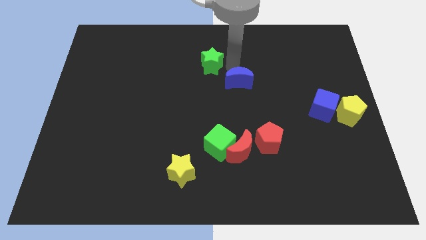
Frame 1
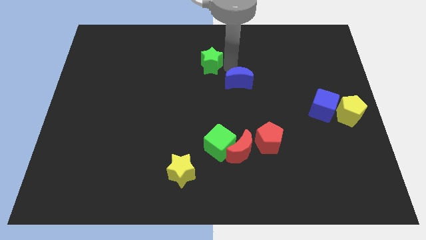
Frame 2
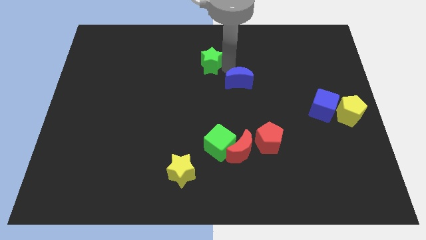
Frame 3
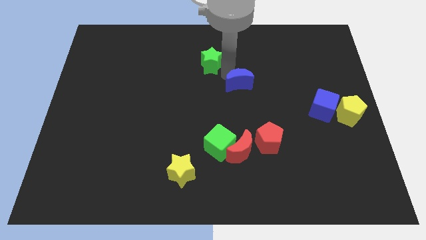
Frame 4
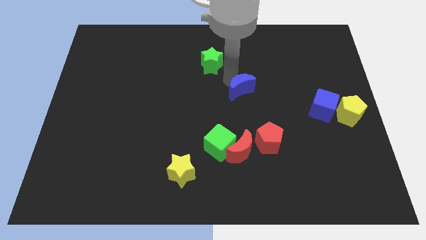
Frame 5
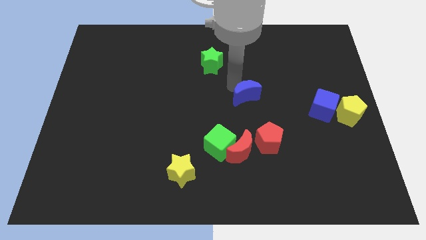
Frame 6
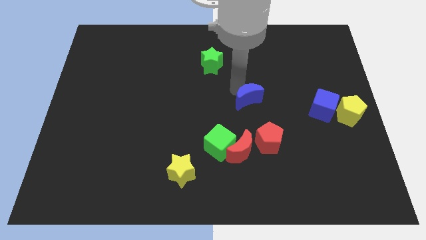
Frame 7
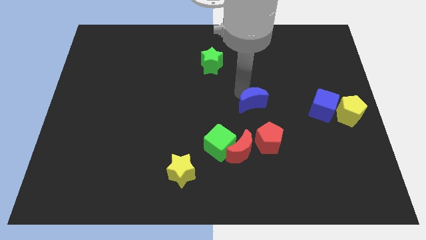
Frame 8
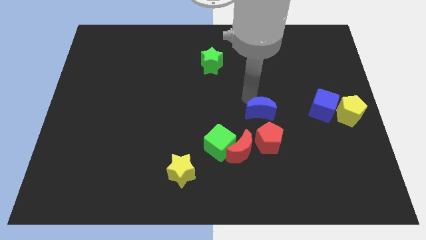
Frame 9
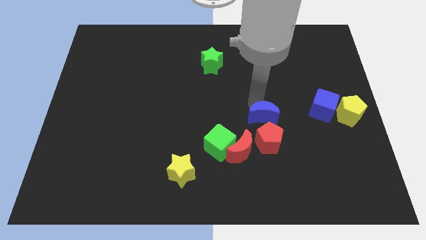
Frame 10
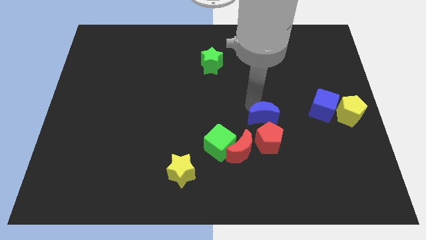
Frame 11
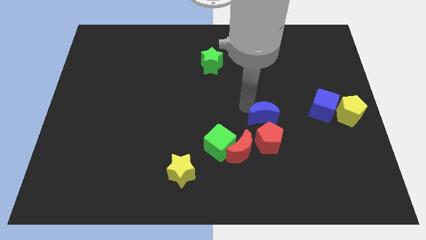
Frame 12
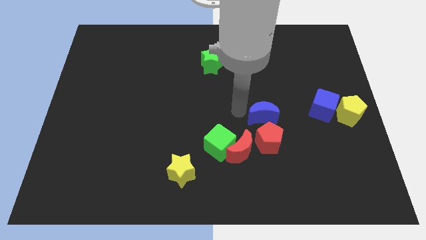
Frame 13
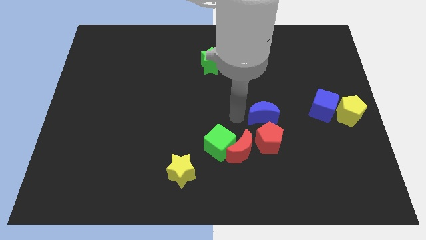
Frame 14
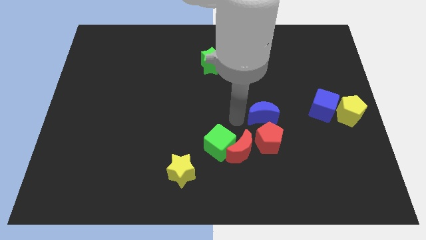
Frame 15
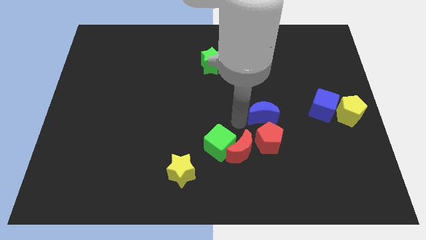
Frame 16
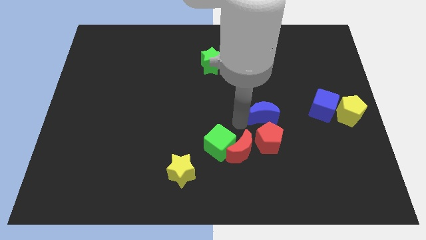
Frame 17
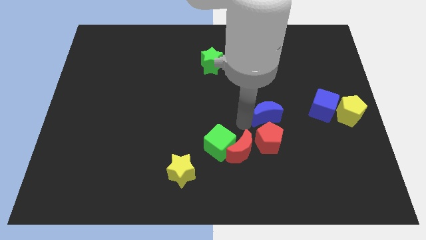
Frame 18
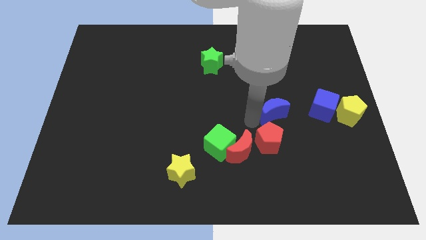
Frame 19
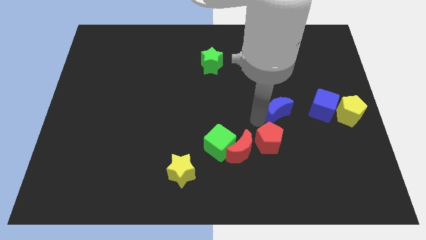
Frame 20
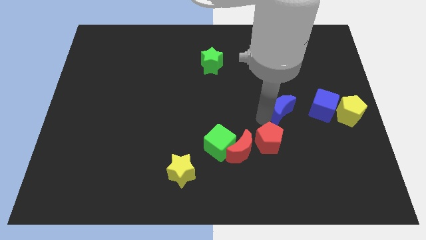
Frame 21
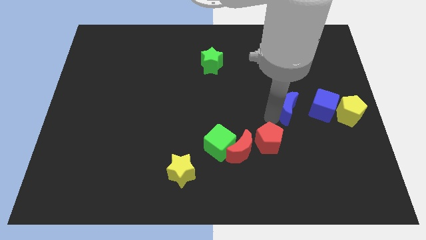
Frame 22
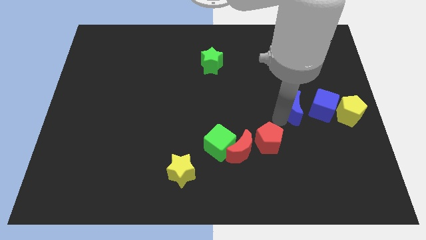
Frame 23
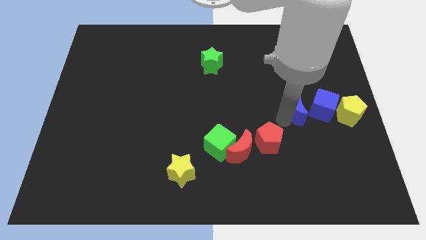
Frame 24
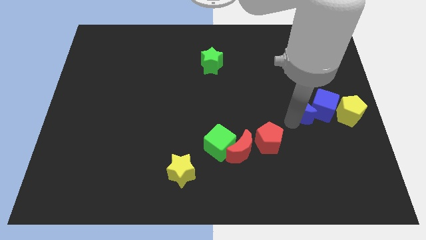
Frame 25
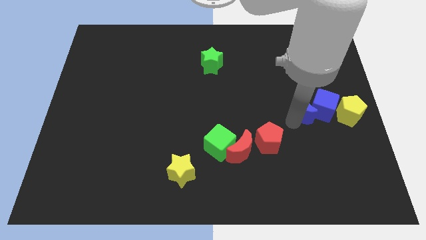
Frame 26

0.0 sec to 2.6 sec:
move the blue crescent to the left side of blue cube

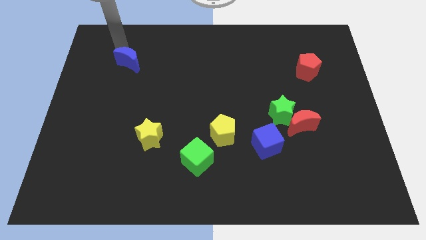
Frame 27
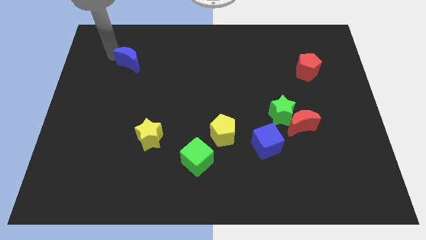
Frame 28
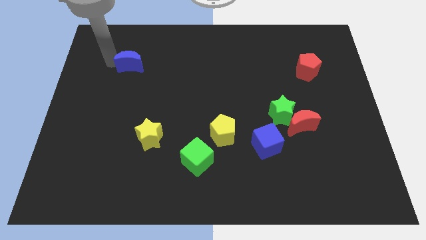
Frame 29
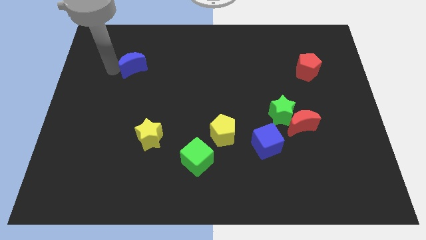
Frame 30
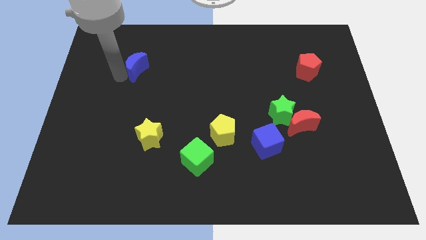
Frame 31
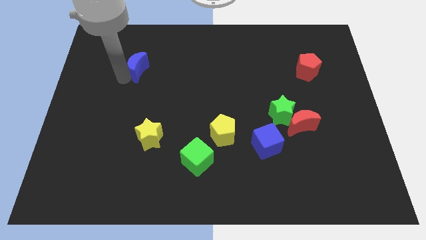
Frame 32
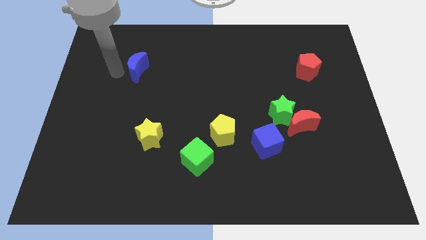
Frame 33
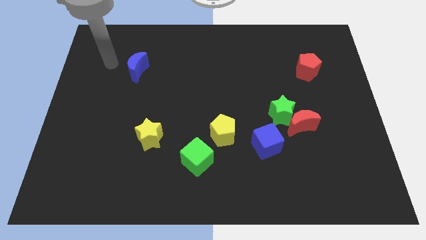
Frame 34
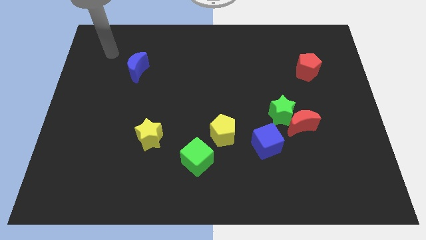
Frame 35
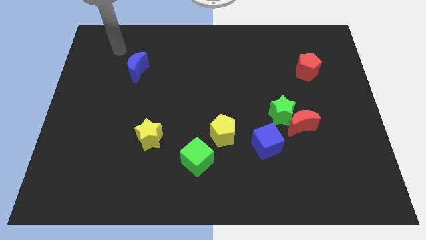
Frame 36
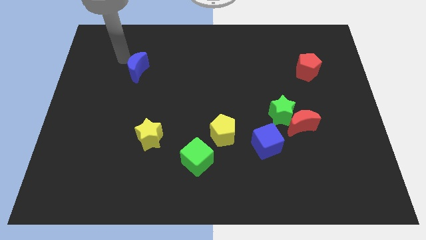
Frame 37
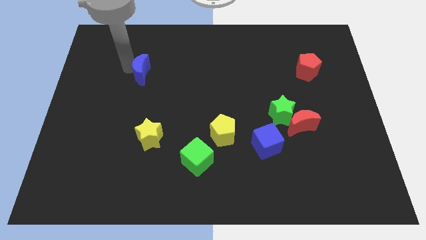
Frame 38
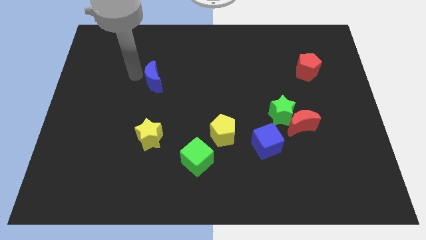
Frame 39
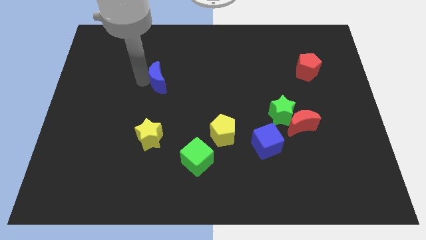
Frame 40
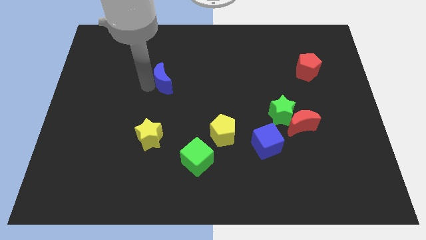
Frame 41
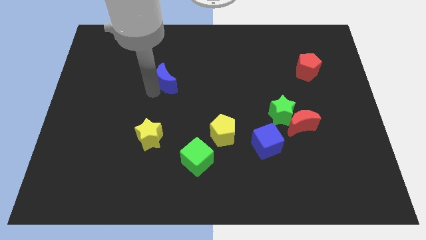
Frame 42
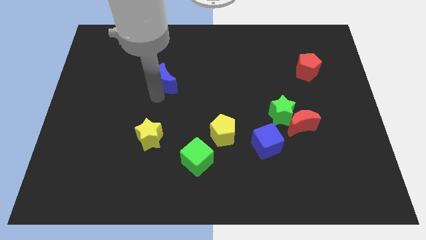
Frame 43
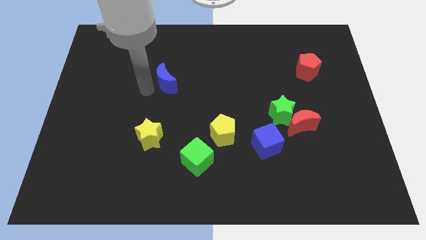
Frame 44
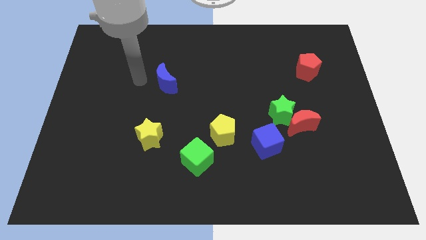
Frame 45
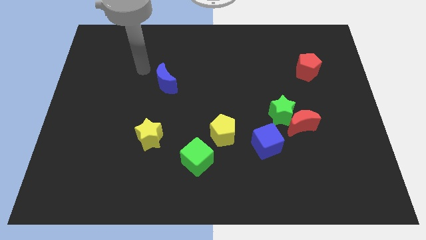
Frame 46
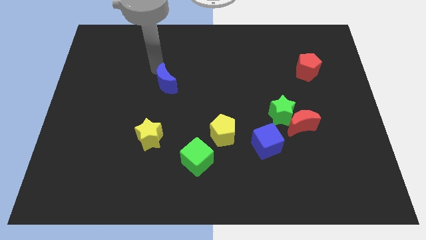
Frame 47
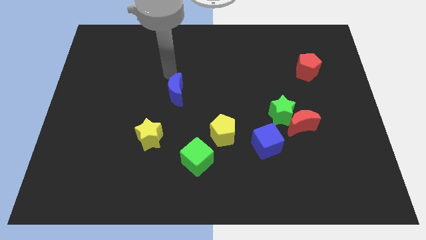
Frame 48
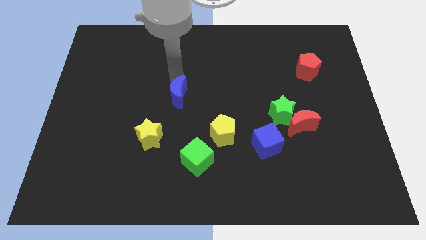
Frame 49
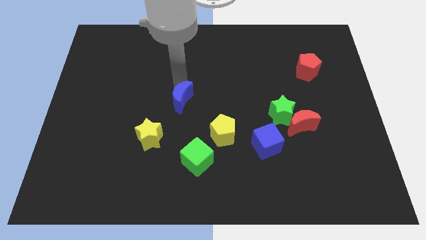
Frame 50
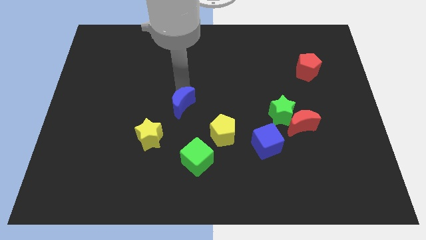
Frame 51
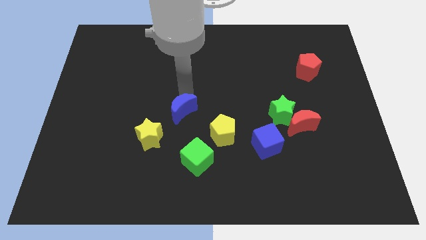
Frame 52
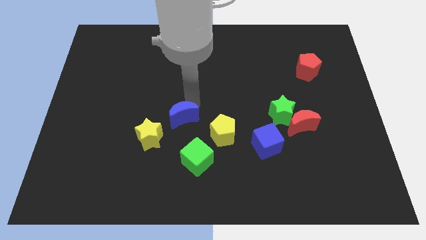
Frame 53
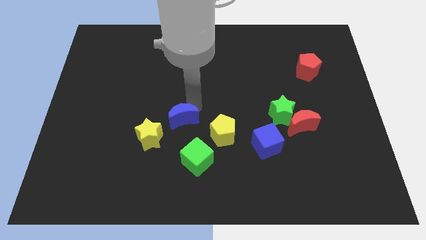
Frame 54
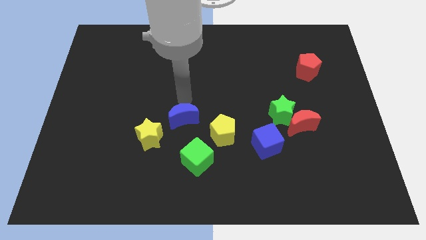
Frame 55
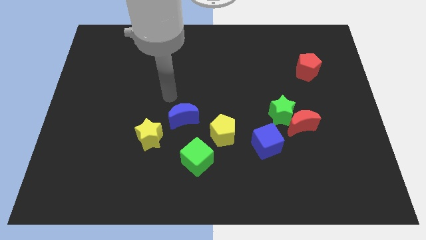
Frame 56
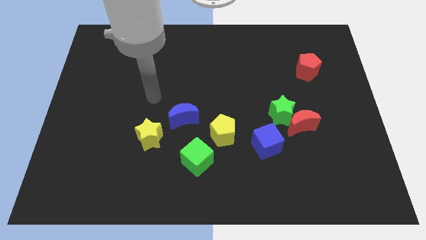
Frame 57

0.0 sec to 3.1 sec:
place the blue crescent at the top left of the yellow pentagon

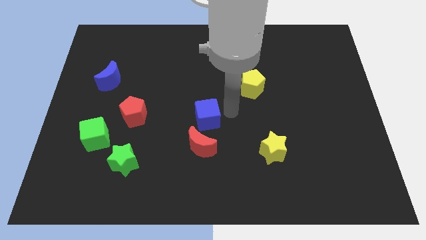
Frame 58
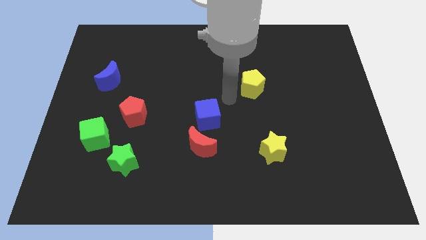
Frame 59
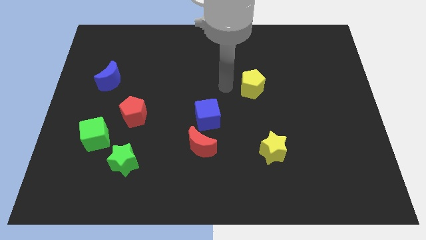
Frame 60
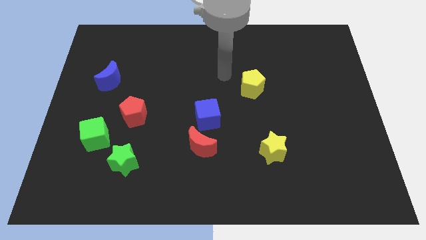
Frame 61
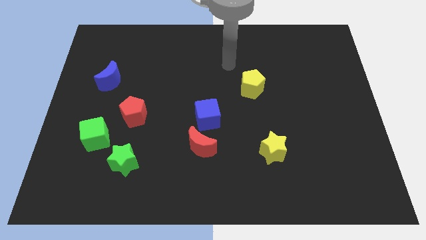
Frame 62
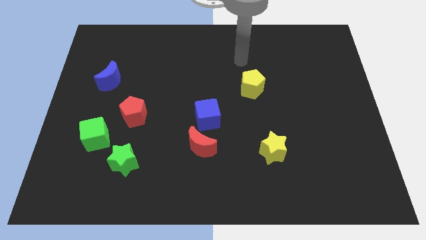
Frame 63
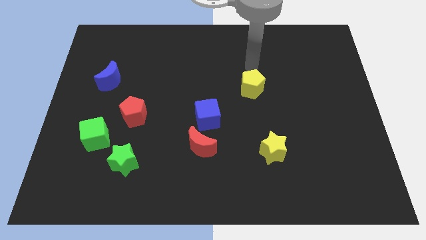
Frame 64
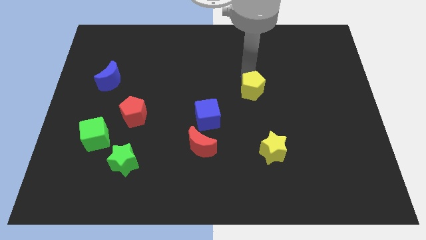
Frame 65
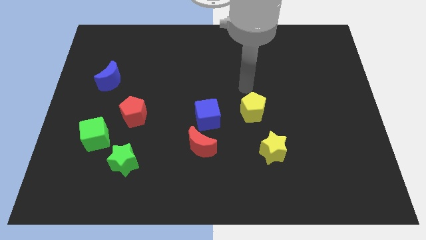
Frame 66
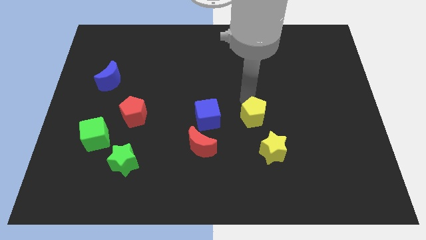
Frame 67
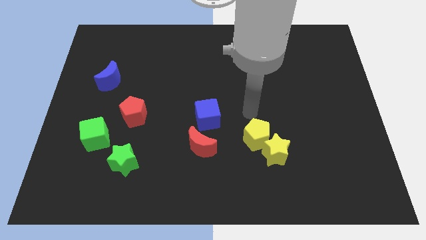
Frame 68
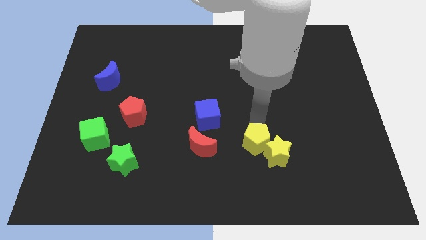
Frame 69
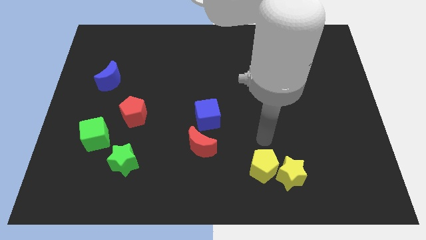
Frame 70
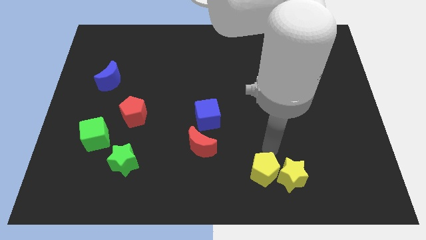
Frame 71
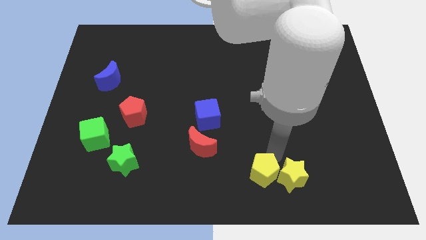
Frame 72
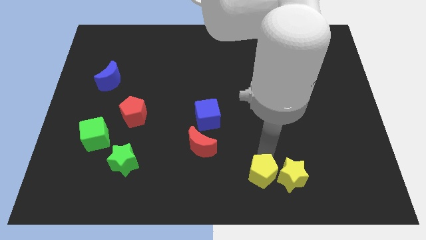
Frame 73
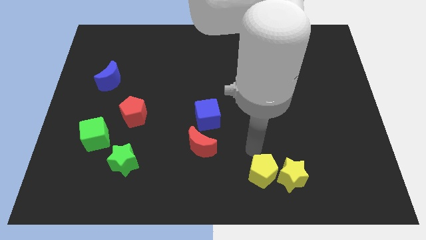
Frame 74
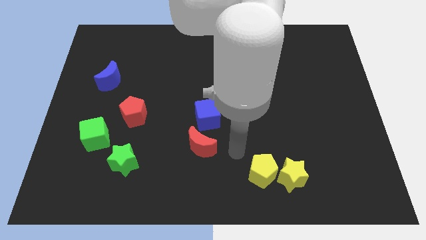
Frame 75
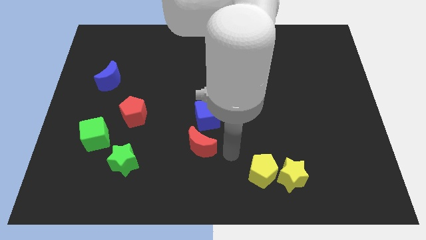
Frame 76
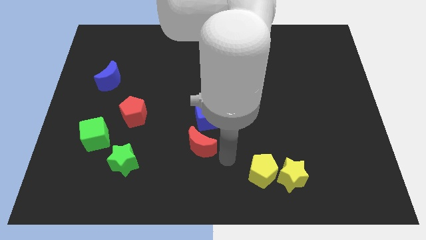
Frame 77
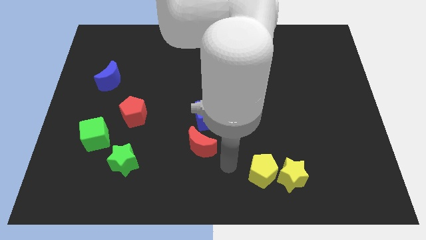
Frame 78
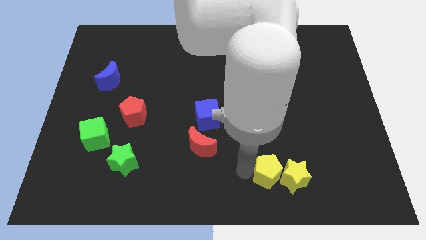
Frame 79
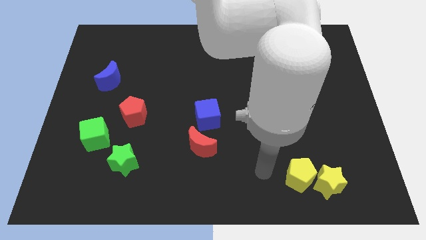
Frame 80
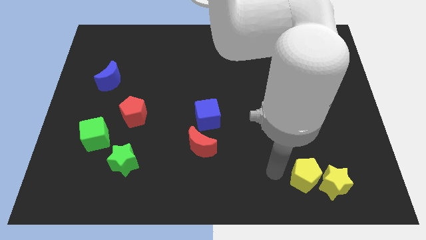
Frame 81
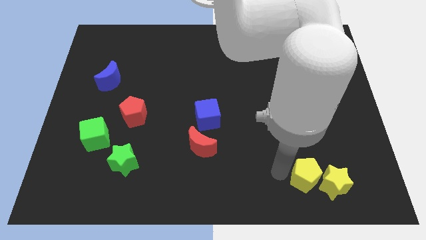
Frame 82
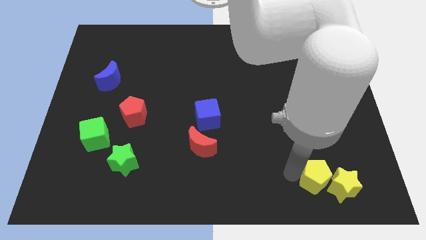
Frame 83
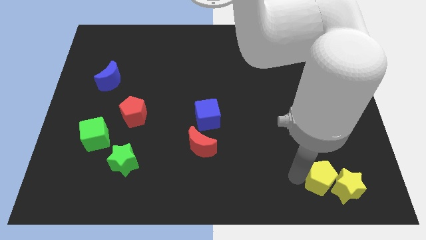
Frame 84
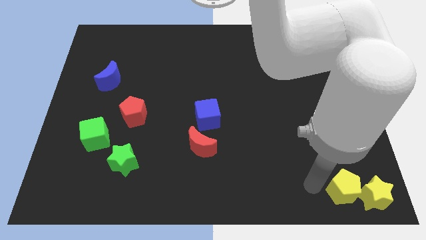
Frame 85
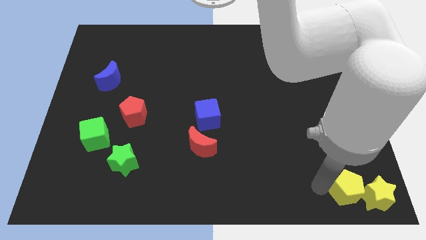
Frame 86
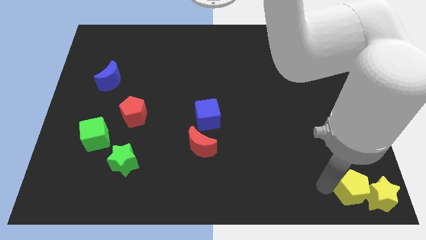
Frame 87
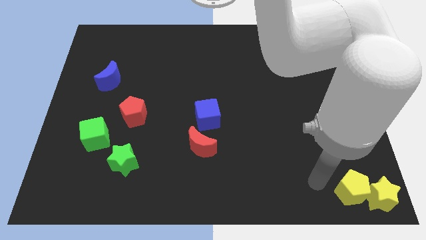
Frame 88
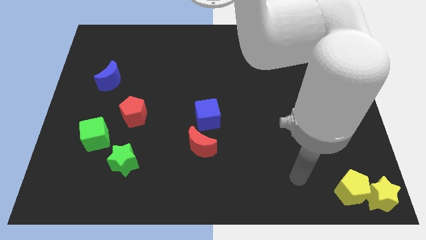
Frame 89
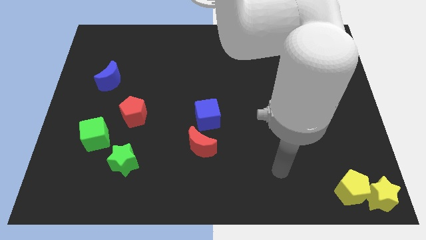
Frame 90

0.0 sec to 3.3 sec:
move the yellow blocks to the bottom right side
